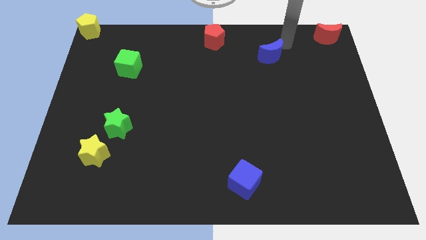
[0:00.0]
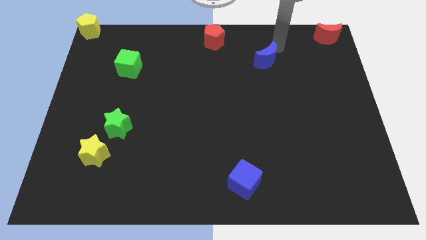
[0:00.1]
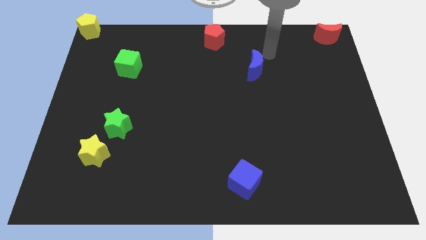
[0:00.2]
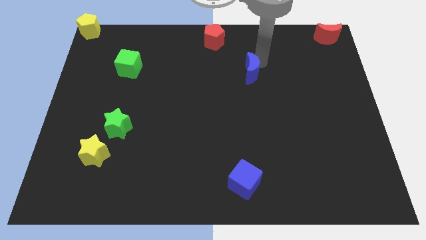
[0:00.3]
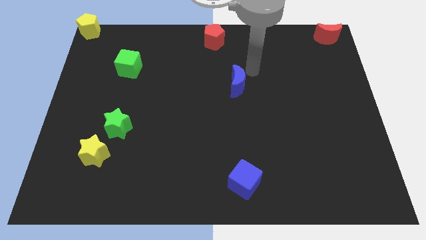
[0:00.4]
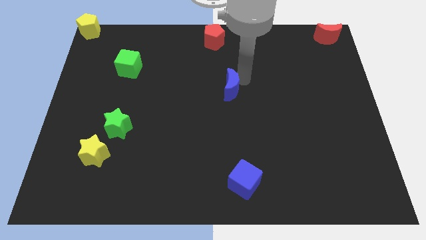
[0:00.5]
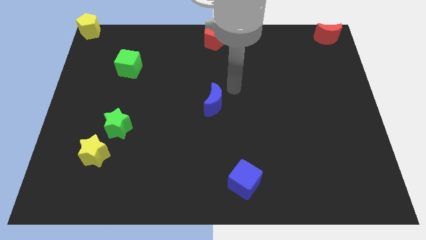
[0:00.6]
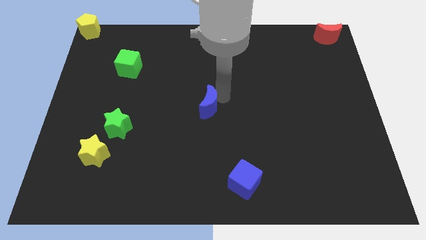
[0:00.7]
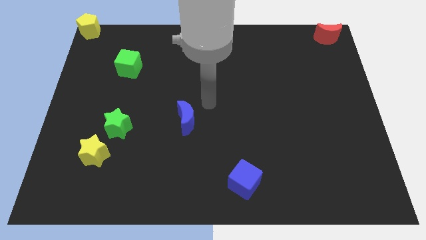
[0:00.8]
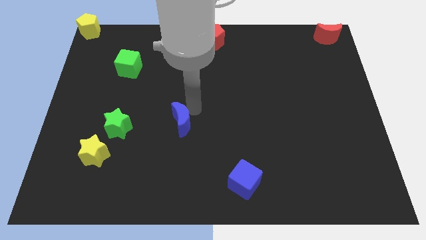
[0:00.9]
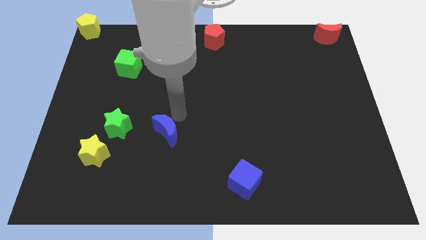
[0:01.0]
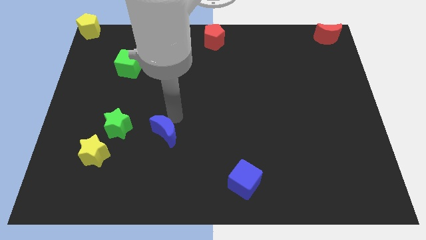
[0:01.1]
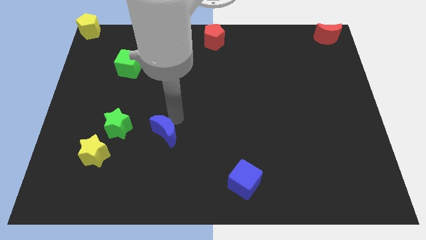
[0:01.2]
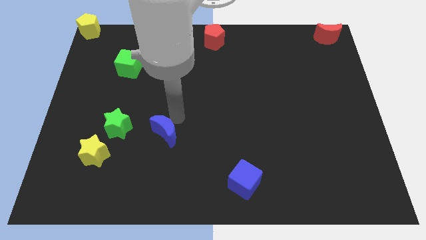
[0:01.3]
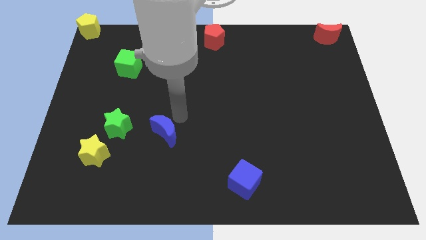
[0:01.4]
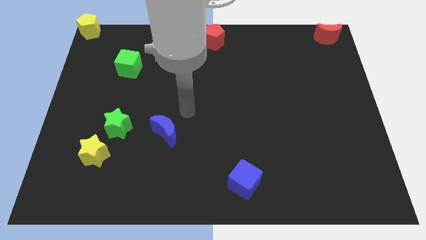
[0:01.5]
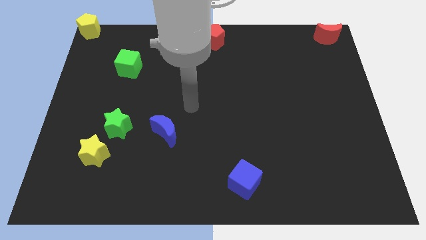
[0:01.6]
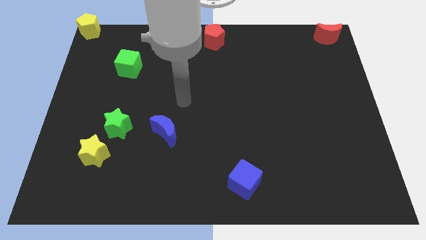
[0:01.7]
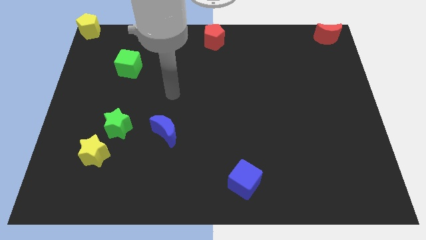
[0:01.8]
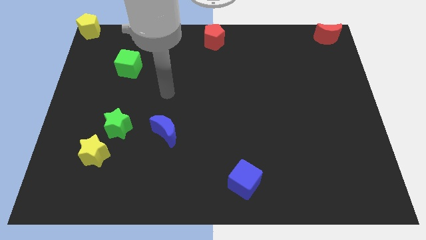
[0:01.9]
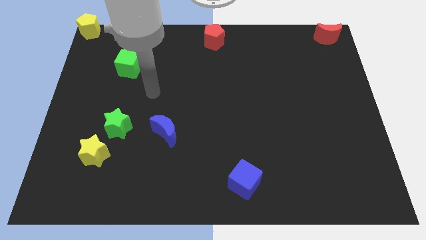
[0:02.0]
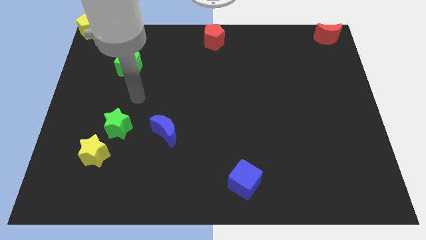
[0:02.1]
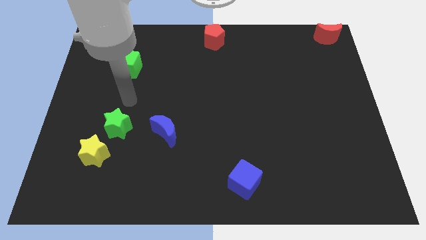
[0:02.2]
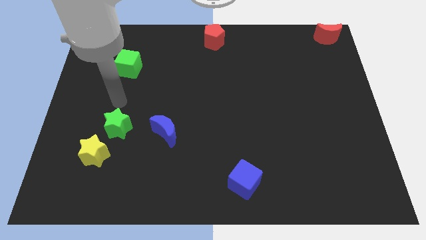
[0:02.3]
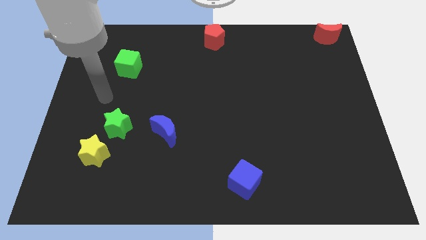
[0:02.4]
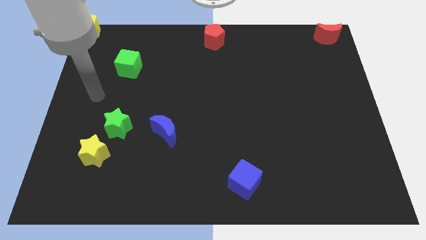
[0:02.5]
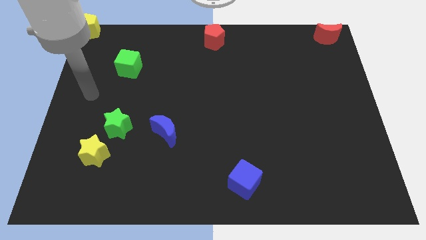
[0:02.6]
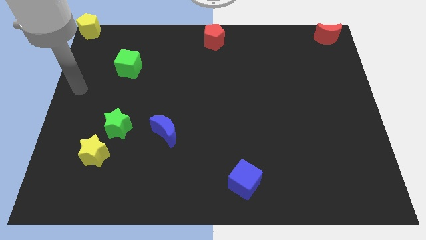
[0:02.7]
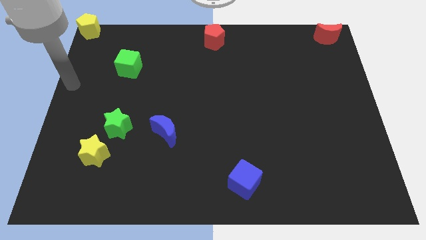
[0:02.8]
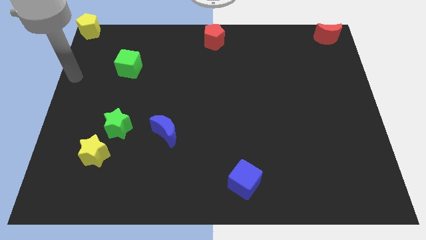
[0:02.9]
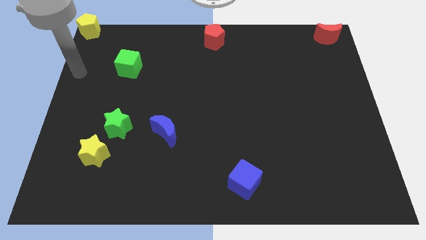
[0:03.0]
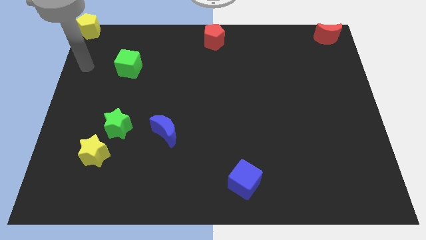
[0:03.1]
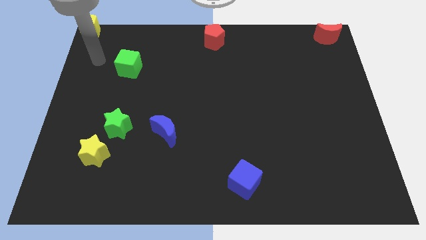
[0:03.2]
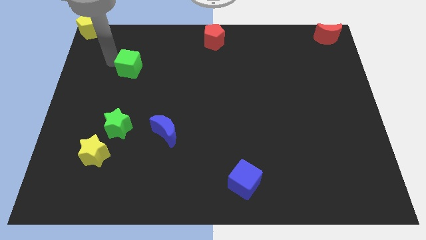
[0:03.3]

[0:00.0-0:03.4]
push the blue moon downward

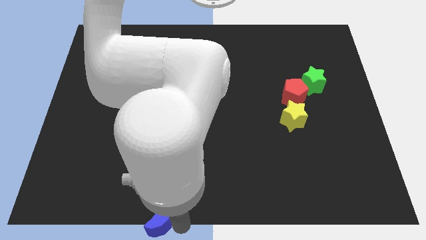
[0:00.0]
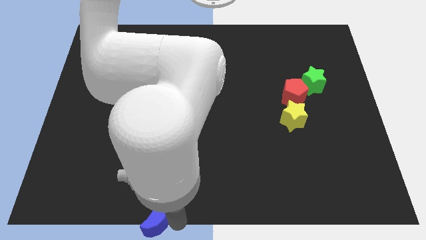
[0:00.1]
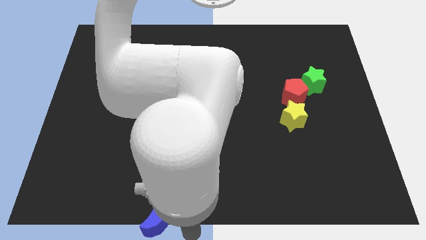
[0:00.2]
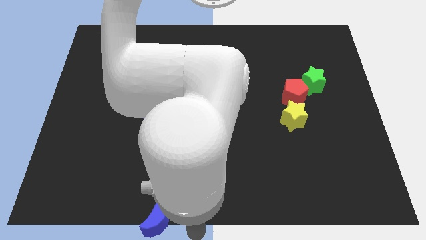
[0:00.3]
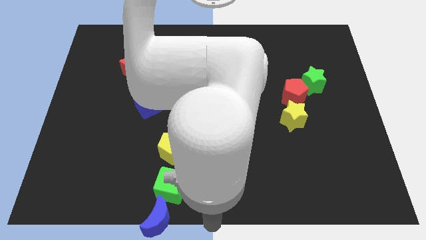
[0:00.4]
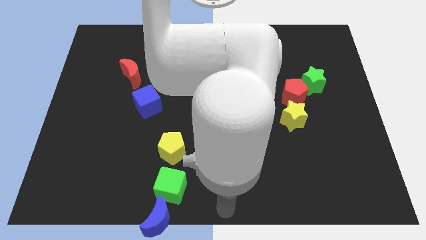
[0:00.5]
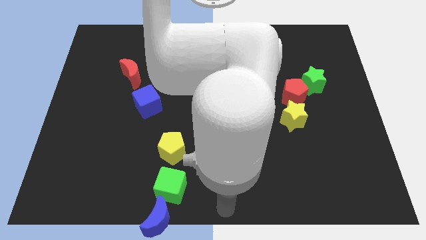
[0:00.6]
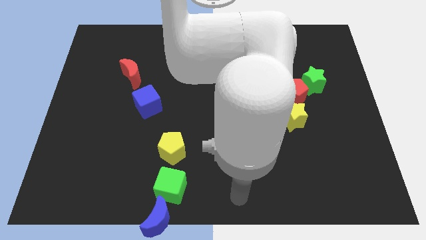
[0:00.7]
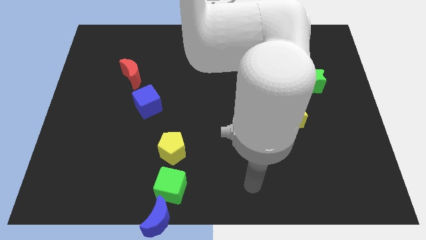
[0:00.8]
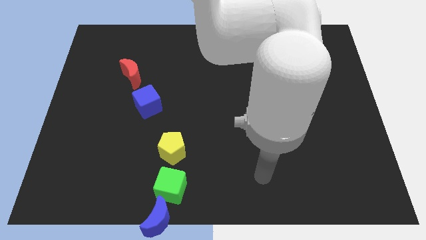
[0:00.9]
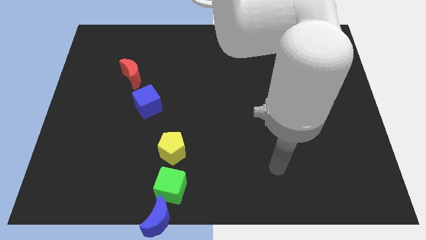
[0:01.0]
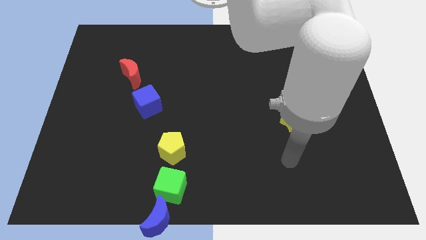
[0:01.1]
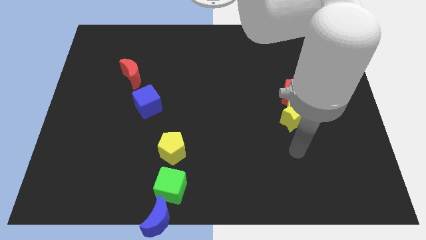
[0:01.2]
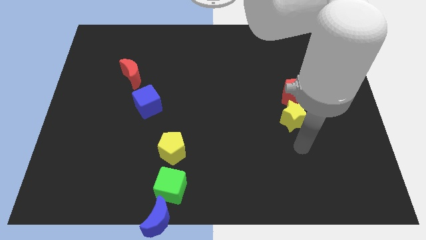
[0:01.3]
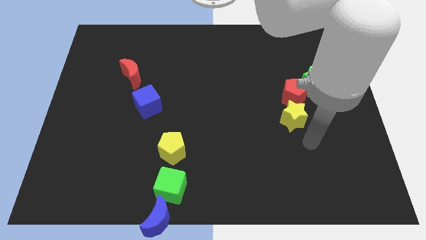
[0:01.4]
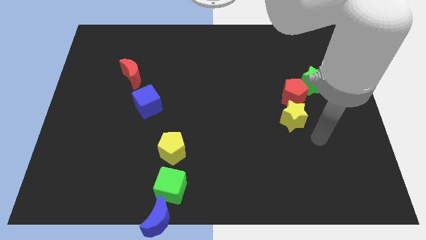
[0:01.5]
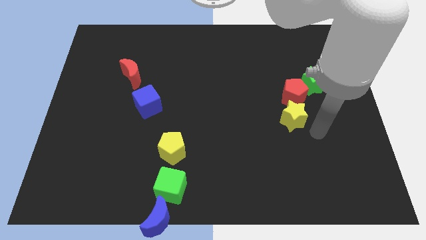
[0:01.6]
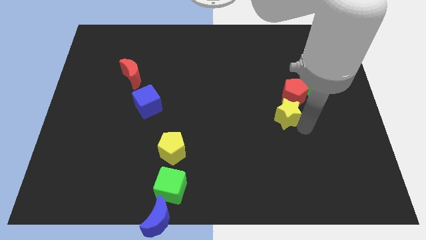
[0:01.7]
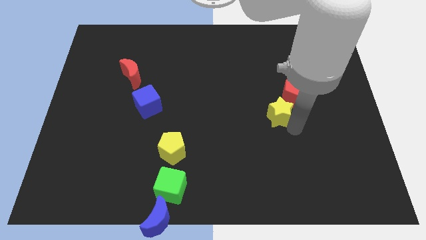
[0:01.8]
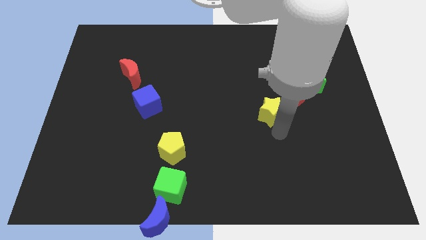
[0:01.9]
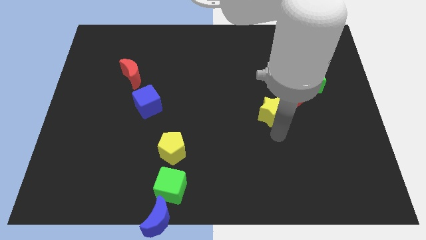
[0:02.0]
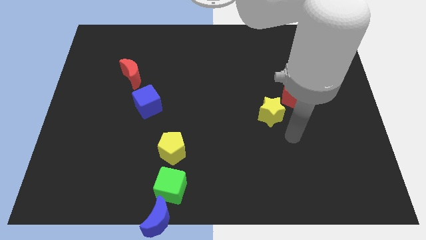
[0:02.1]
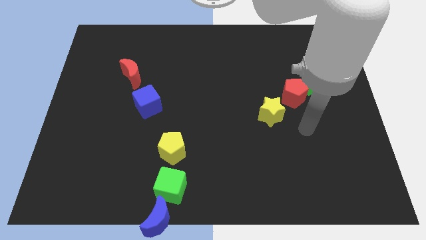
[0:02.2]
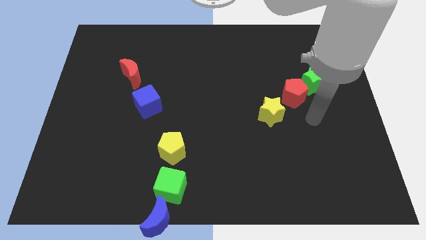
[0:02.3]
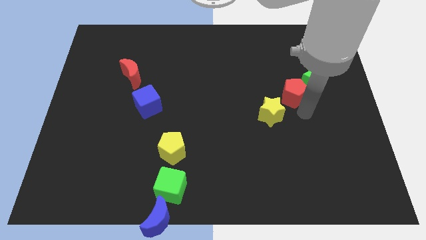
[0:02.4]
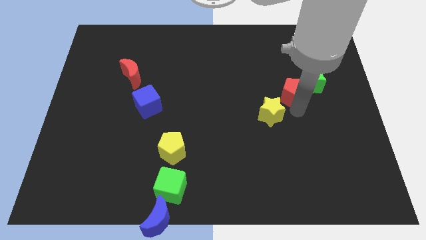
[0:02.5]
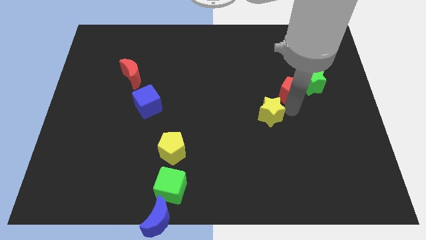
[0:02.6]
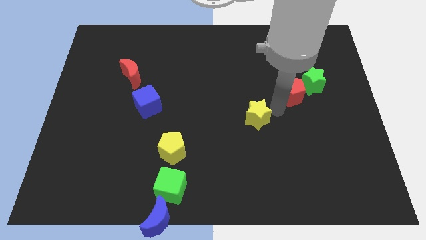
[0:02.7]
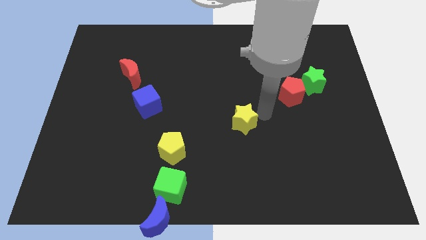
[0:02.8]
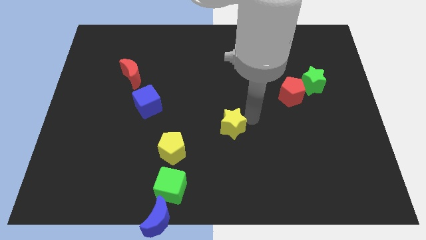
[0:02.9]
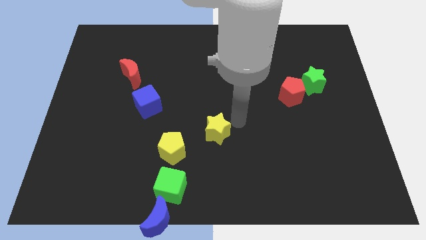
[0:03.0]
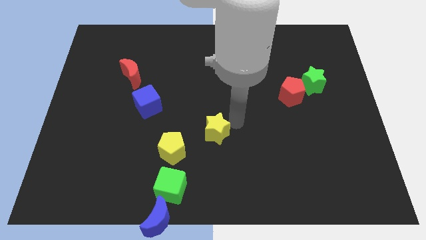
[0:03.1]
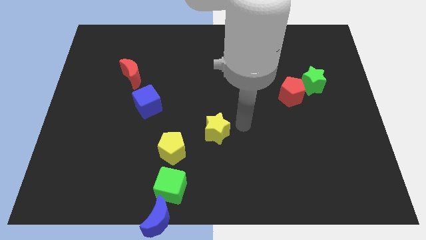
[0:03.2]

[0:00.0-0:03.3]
move your arm away from the blue moon

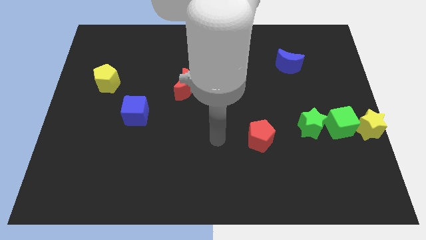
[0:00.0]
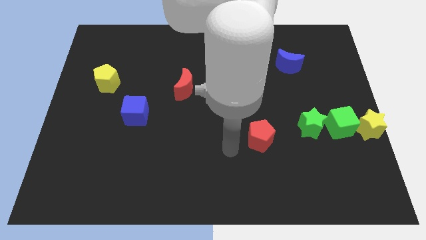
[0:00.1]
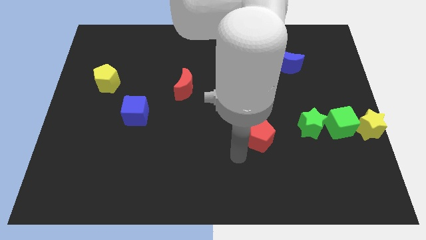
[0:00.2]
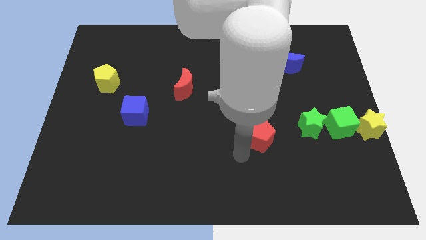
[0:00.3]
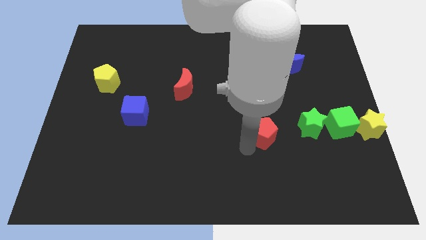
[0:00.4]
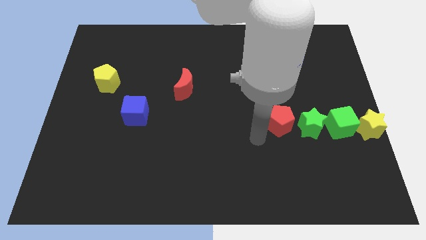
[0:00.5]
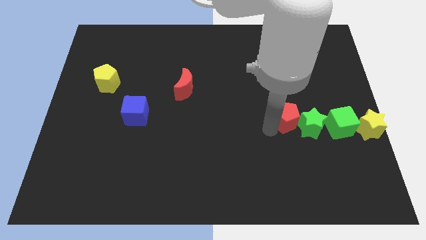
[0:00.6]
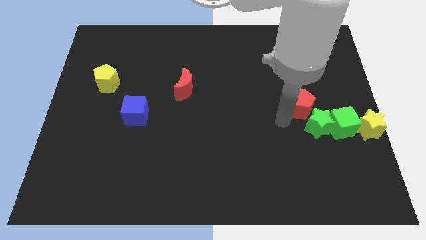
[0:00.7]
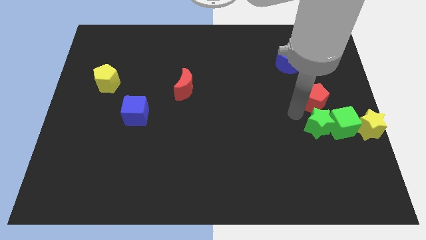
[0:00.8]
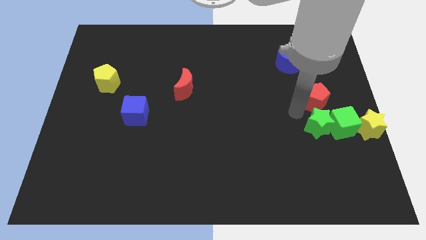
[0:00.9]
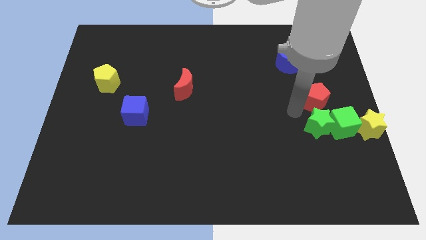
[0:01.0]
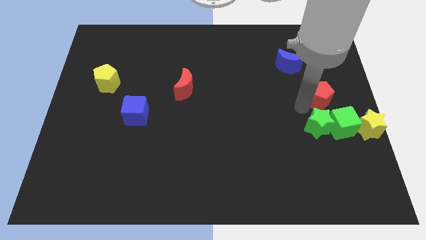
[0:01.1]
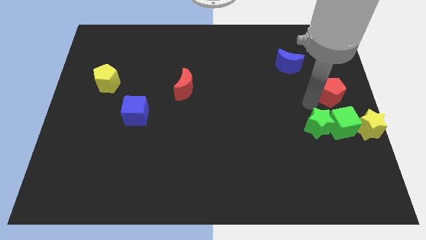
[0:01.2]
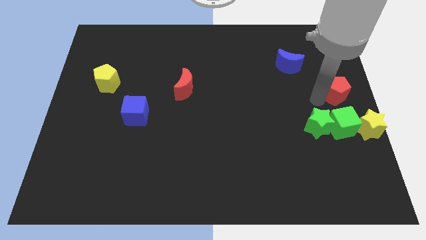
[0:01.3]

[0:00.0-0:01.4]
push the red pentagon to the top side of the green cube

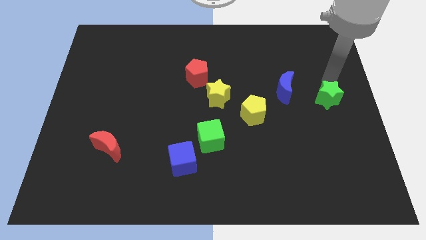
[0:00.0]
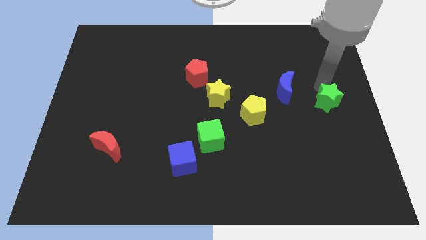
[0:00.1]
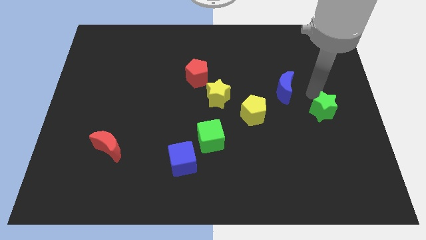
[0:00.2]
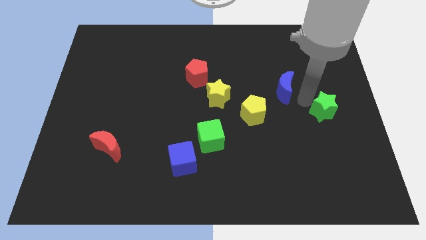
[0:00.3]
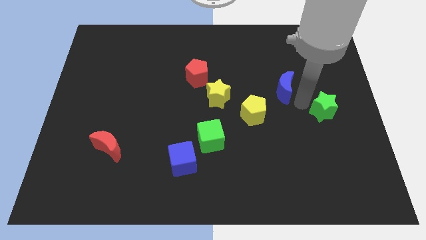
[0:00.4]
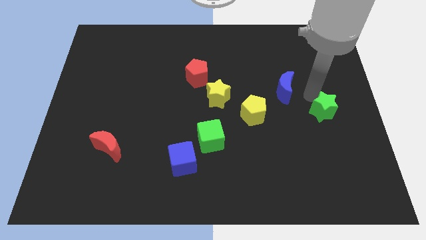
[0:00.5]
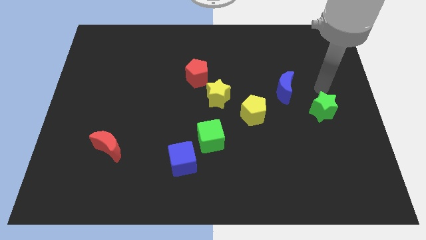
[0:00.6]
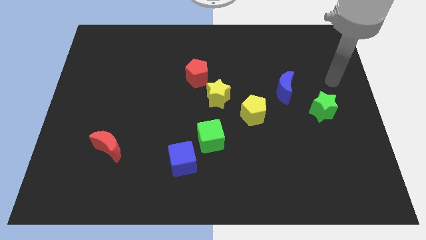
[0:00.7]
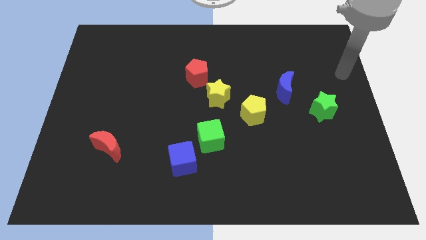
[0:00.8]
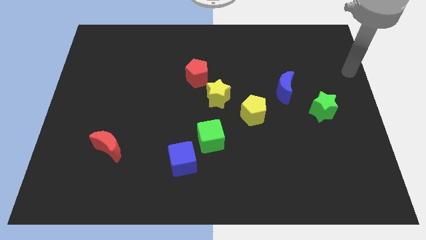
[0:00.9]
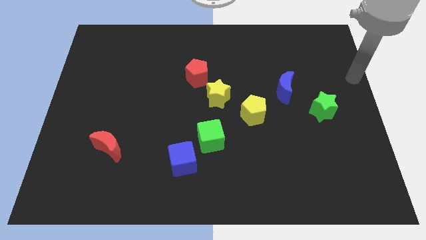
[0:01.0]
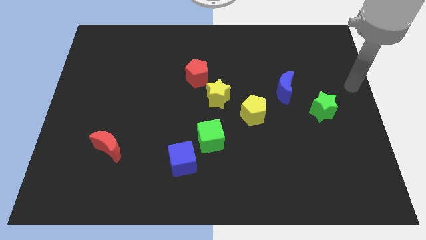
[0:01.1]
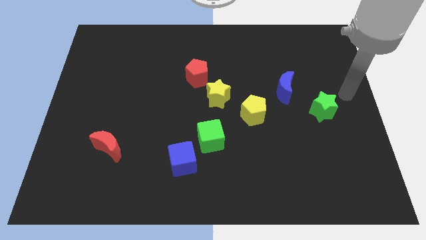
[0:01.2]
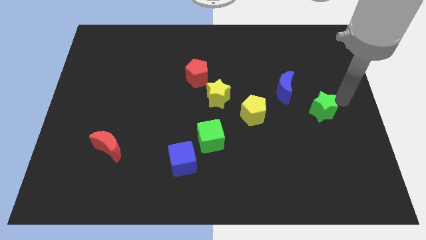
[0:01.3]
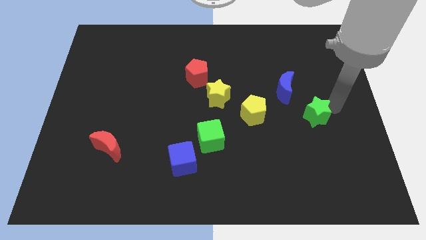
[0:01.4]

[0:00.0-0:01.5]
push the green star horizontally to the right of the yellow pentagon
